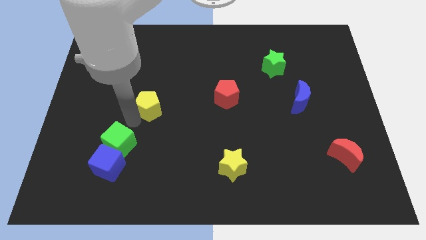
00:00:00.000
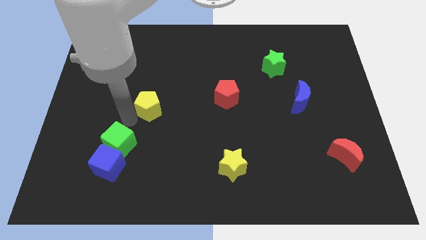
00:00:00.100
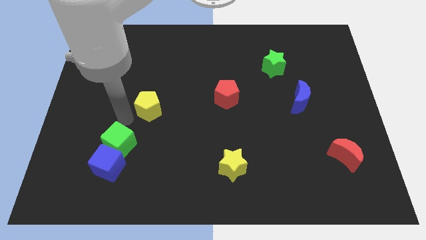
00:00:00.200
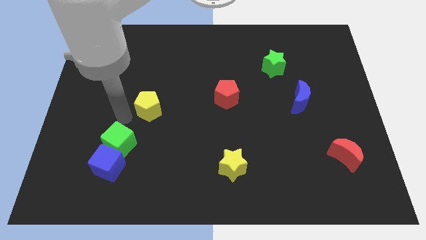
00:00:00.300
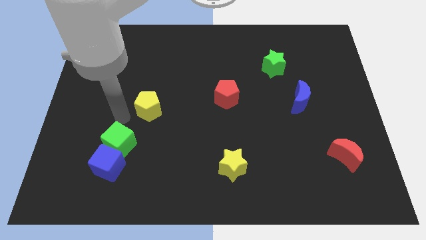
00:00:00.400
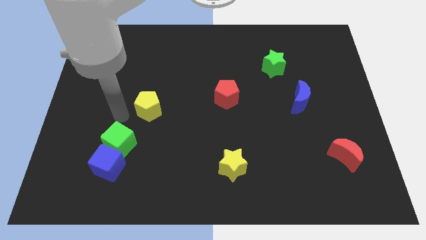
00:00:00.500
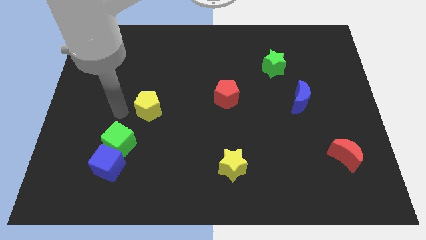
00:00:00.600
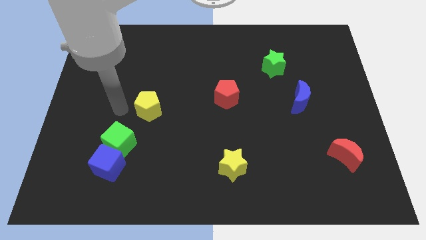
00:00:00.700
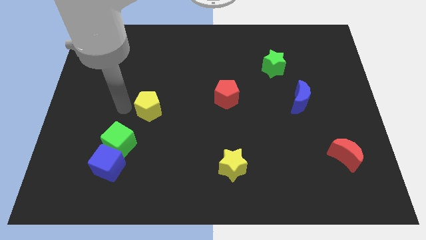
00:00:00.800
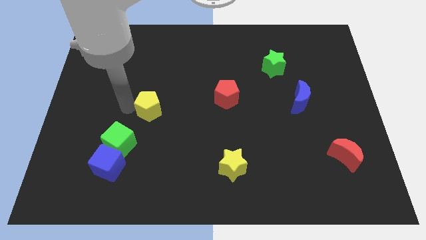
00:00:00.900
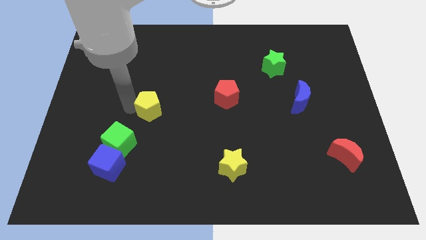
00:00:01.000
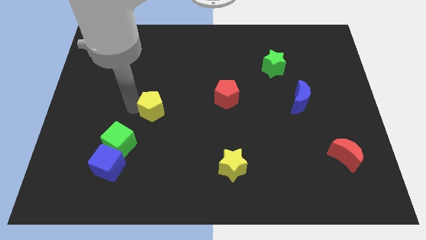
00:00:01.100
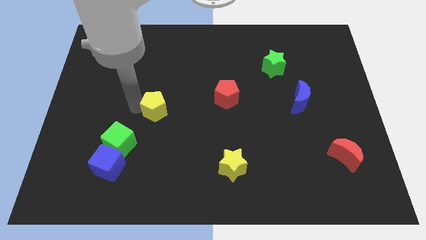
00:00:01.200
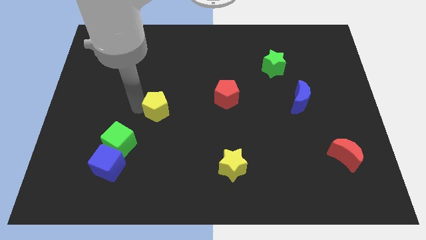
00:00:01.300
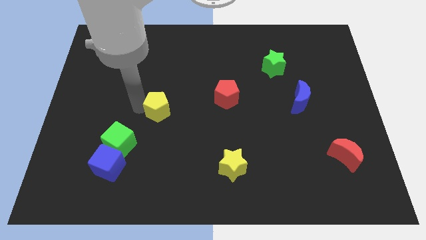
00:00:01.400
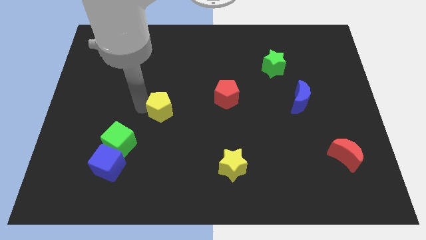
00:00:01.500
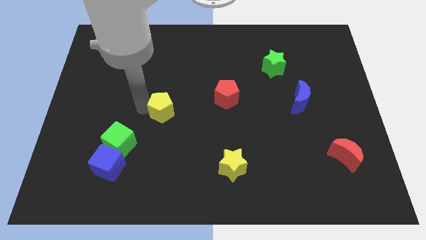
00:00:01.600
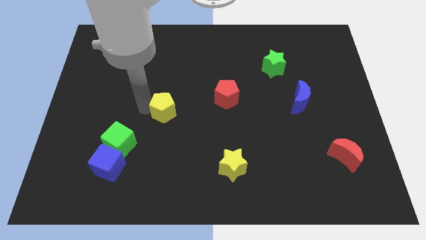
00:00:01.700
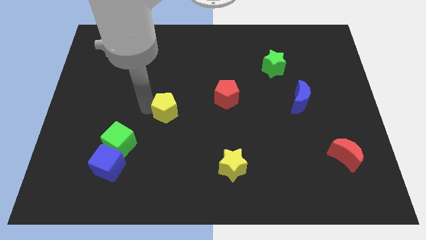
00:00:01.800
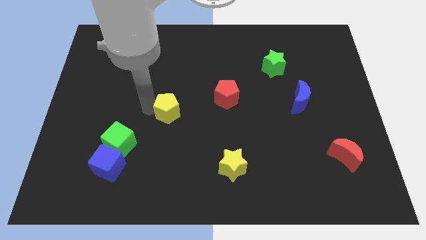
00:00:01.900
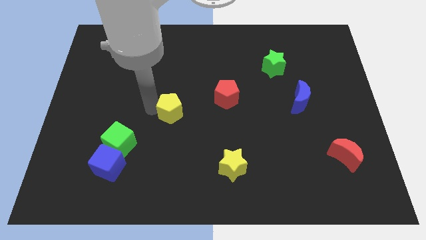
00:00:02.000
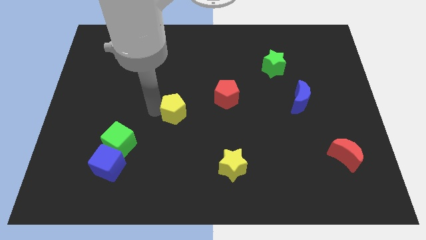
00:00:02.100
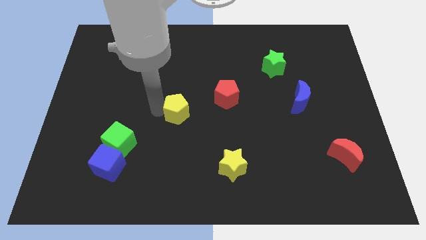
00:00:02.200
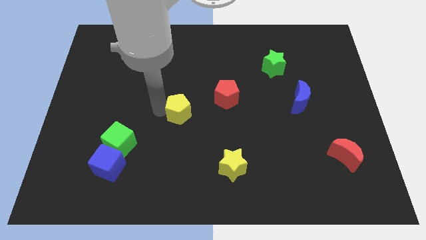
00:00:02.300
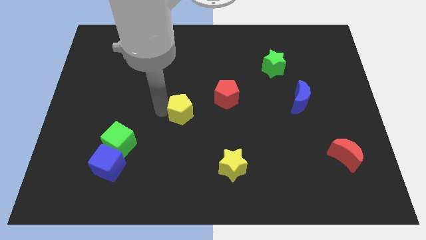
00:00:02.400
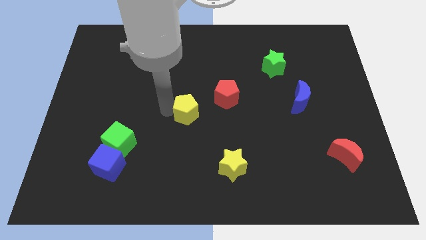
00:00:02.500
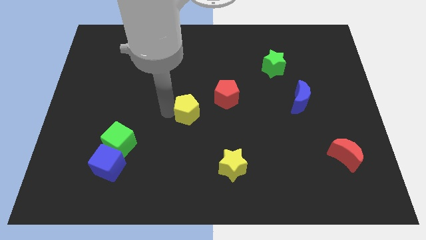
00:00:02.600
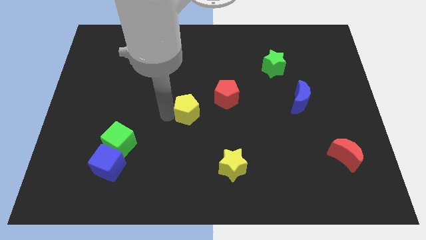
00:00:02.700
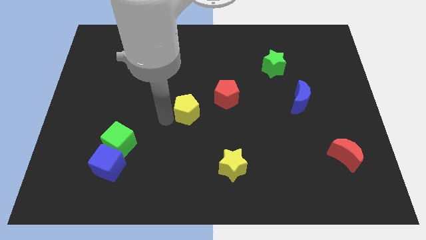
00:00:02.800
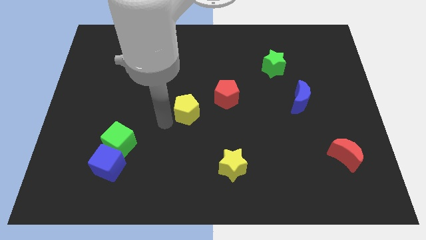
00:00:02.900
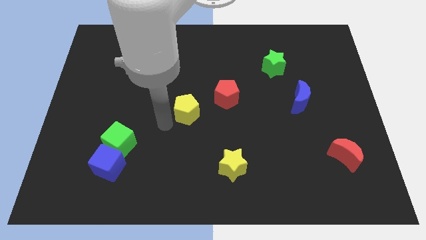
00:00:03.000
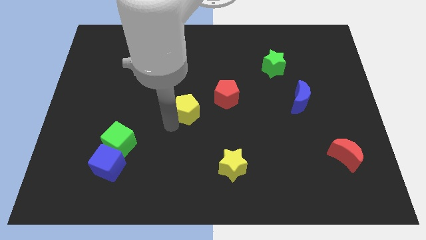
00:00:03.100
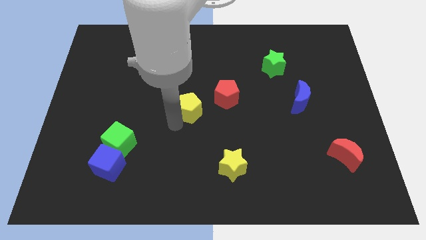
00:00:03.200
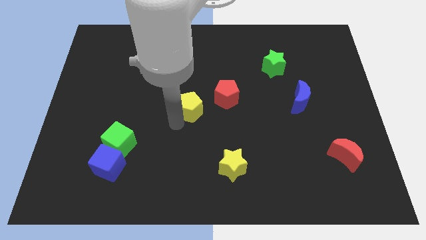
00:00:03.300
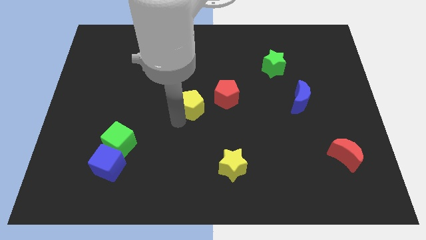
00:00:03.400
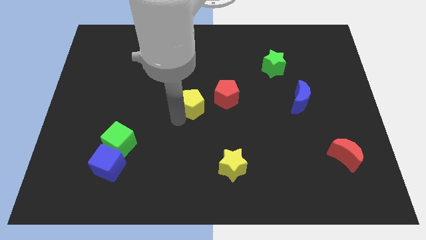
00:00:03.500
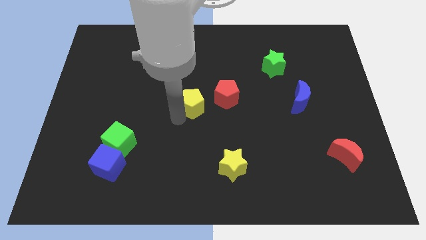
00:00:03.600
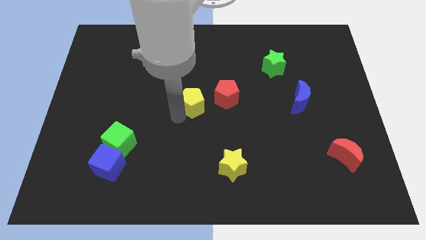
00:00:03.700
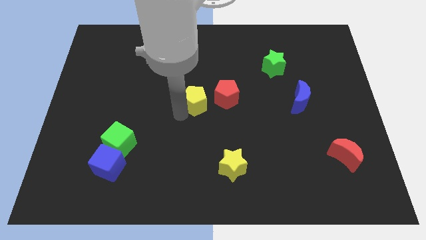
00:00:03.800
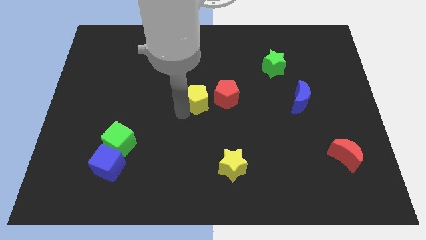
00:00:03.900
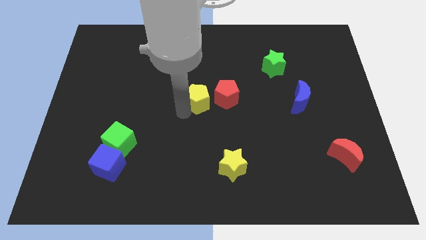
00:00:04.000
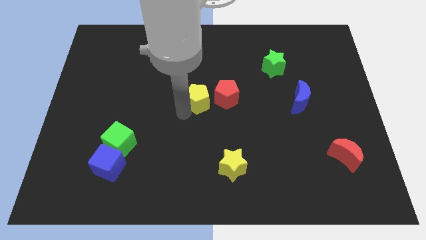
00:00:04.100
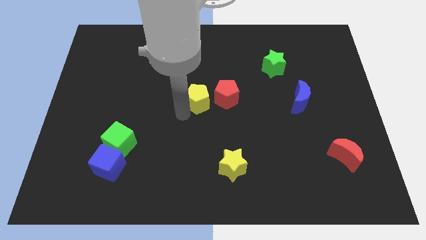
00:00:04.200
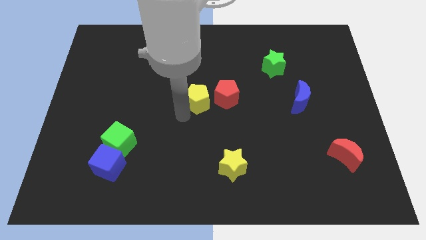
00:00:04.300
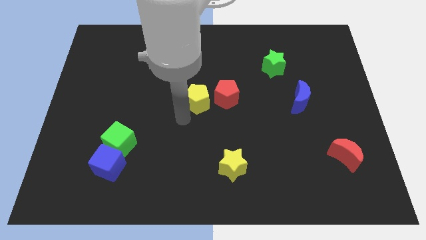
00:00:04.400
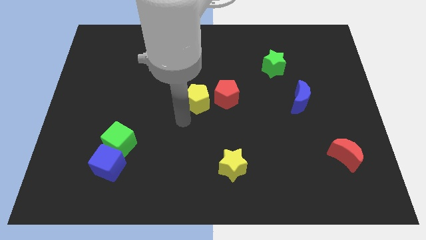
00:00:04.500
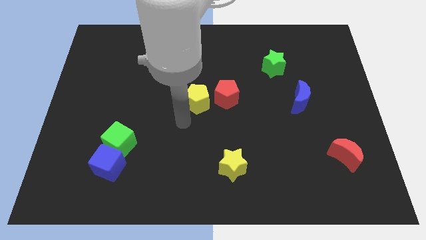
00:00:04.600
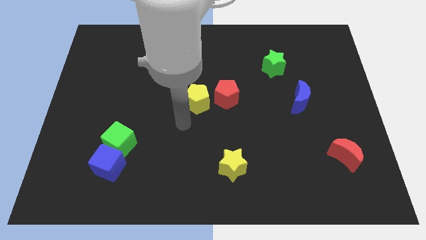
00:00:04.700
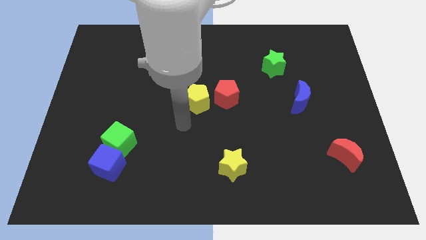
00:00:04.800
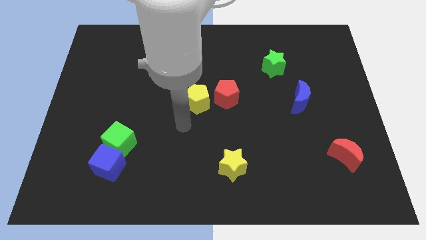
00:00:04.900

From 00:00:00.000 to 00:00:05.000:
move the yellow pentagon to the left of he red pentagon

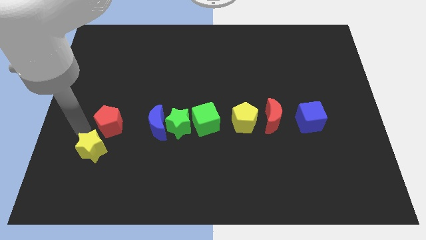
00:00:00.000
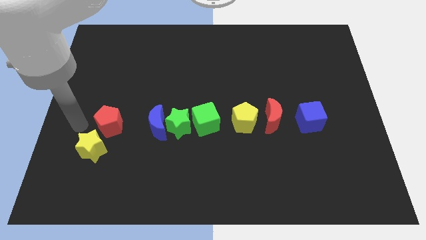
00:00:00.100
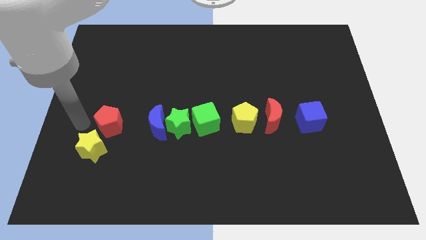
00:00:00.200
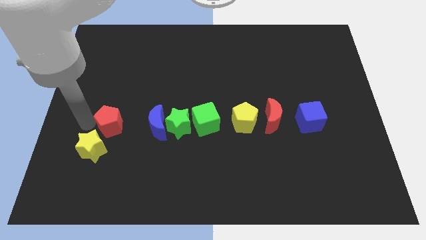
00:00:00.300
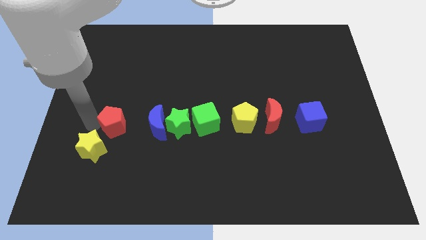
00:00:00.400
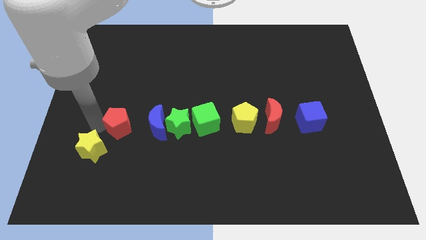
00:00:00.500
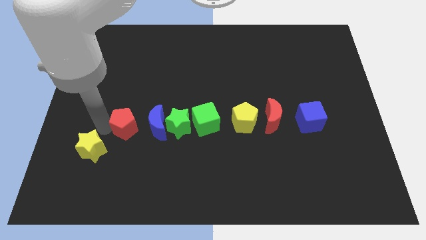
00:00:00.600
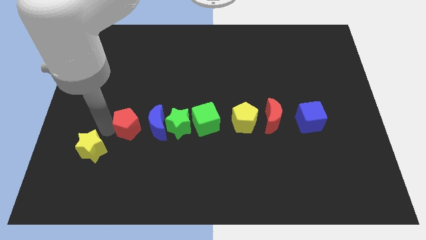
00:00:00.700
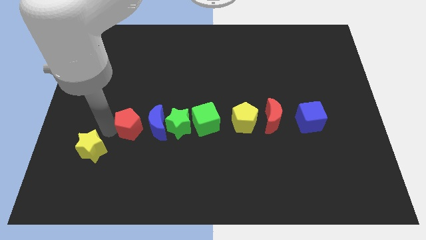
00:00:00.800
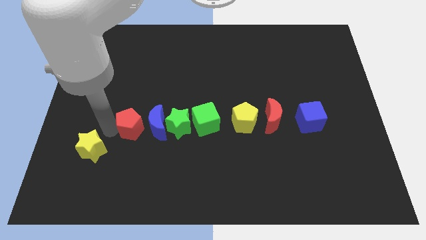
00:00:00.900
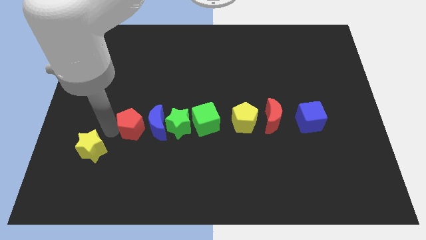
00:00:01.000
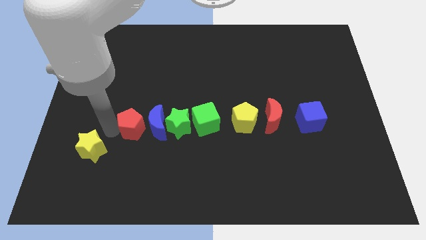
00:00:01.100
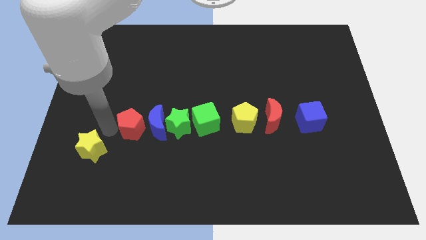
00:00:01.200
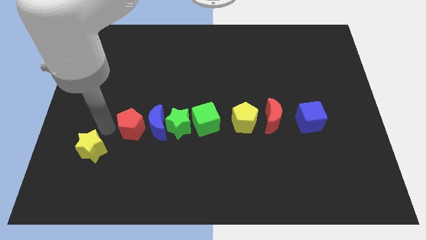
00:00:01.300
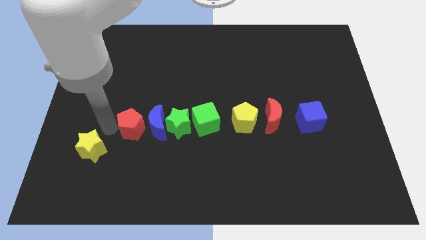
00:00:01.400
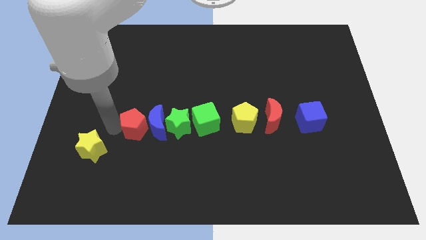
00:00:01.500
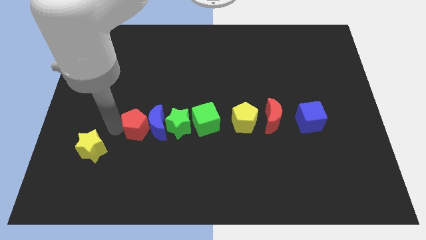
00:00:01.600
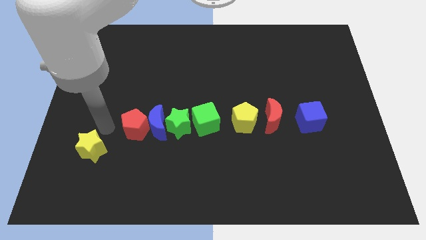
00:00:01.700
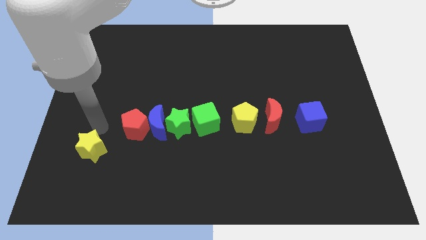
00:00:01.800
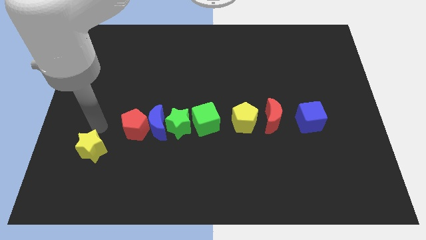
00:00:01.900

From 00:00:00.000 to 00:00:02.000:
move red pentagon to the left side of the blue moon

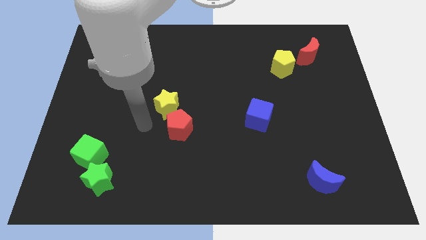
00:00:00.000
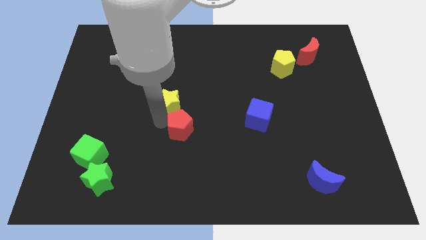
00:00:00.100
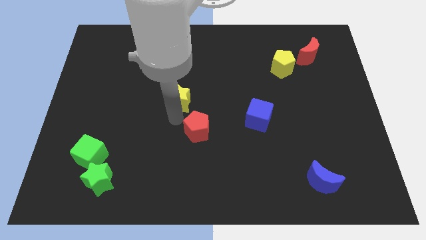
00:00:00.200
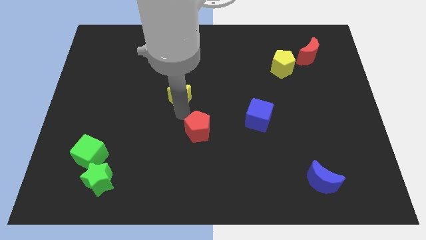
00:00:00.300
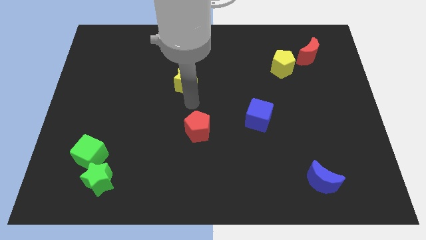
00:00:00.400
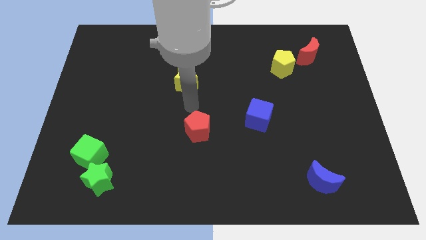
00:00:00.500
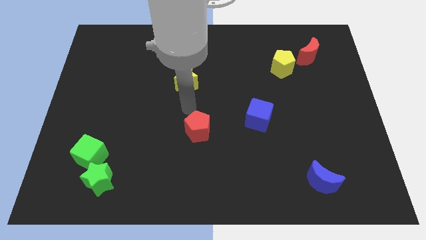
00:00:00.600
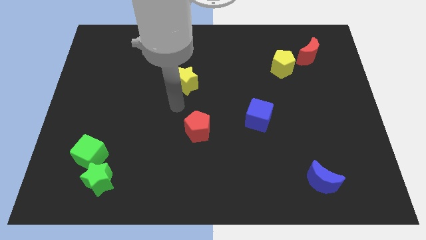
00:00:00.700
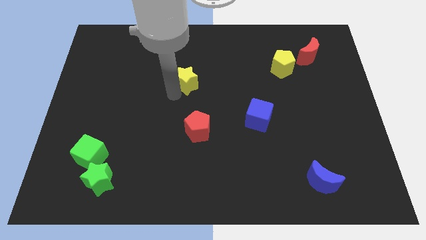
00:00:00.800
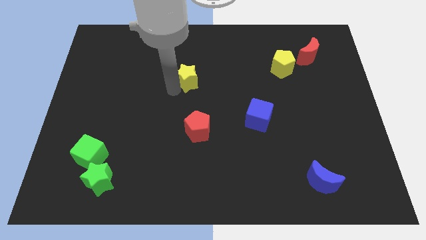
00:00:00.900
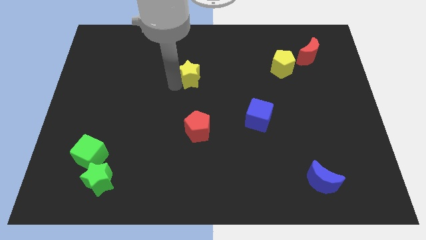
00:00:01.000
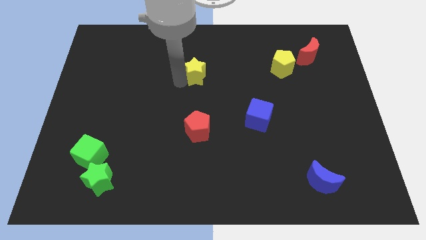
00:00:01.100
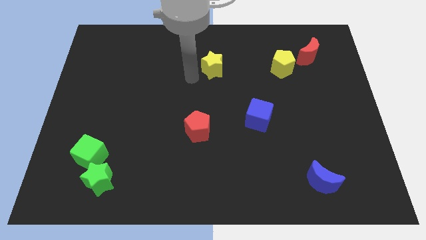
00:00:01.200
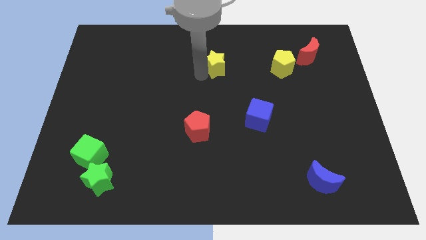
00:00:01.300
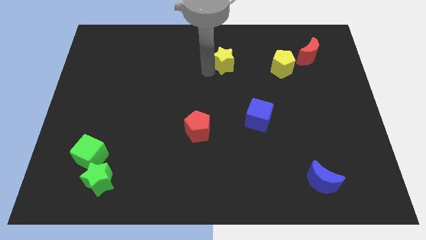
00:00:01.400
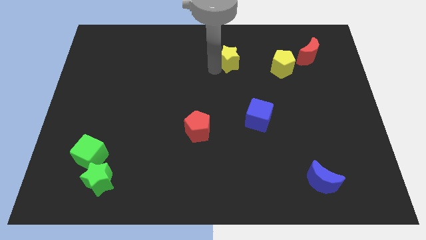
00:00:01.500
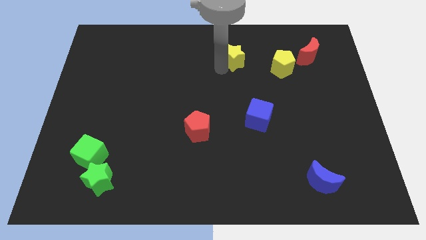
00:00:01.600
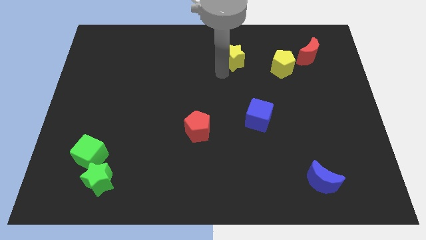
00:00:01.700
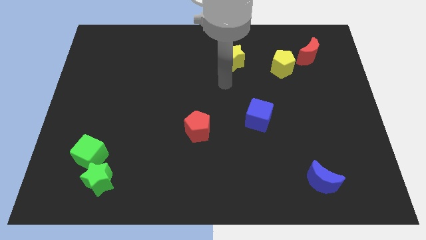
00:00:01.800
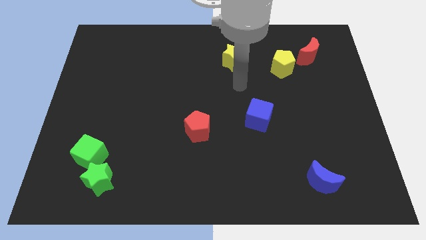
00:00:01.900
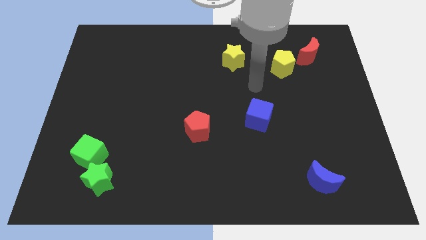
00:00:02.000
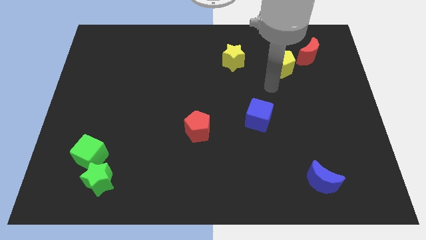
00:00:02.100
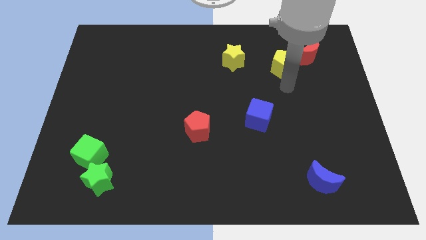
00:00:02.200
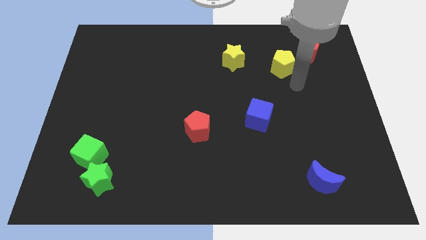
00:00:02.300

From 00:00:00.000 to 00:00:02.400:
move the yellow star left to the yellow pentagon
